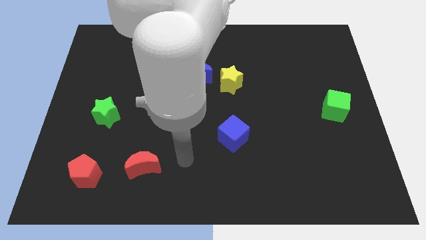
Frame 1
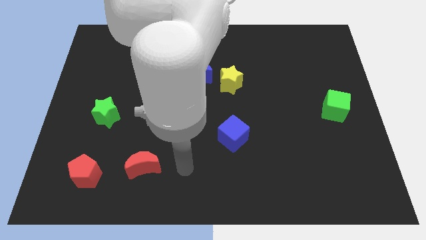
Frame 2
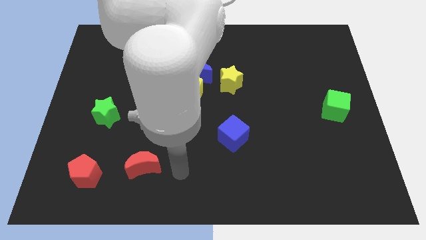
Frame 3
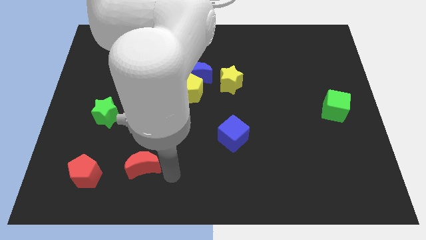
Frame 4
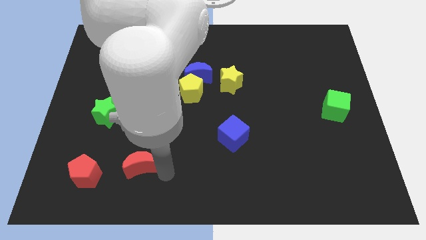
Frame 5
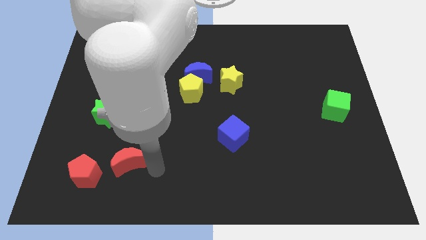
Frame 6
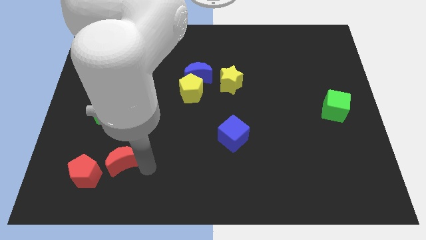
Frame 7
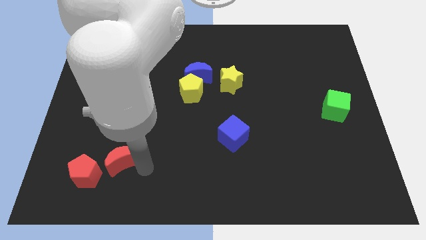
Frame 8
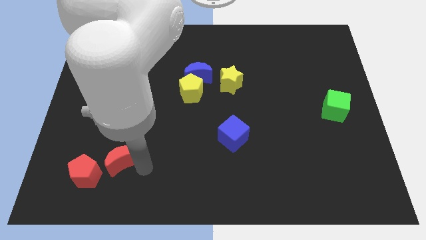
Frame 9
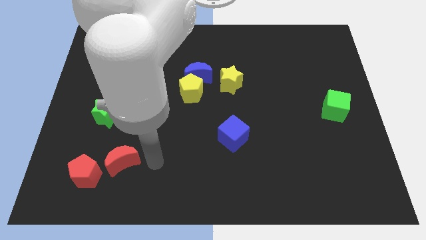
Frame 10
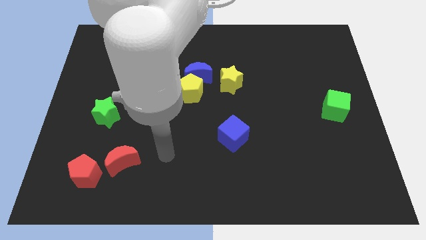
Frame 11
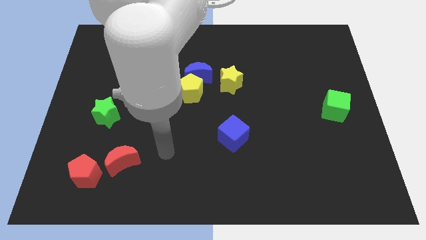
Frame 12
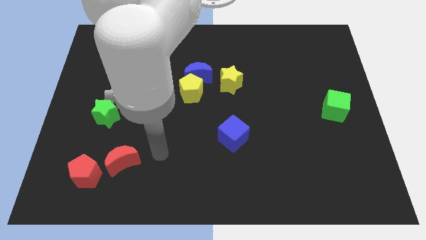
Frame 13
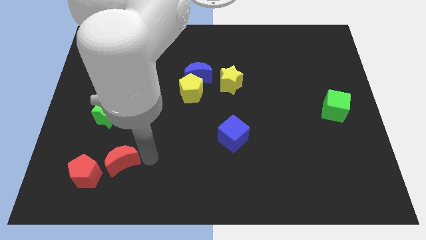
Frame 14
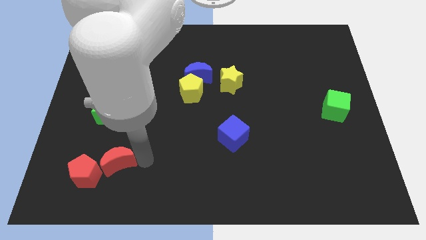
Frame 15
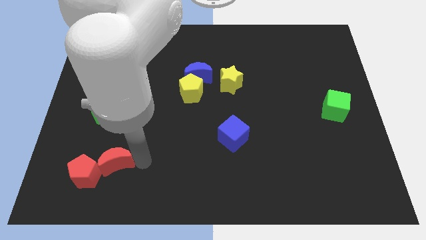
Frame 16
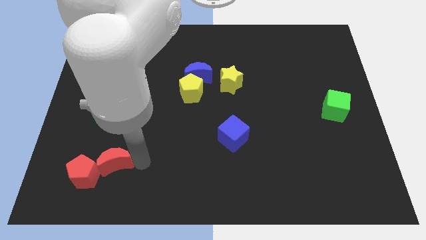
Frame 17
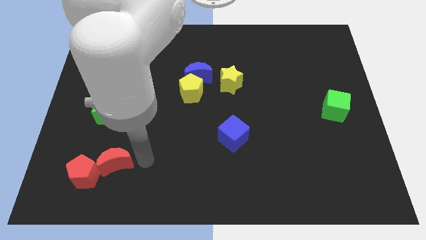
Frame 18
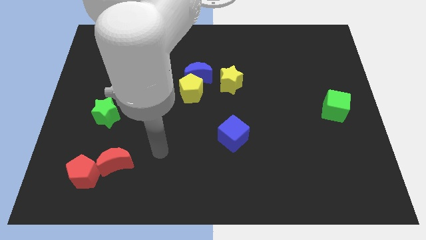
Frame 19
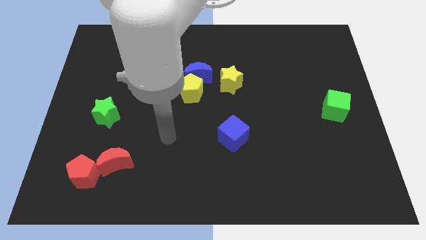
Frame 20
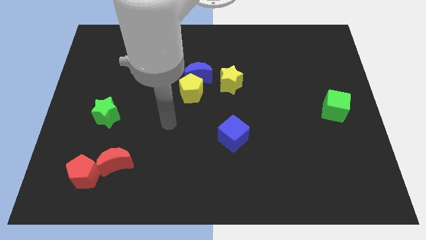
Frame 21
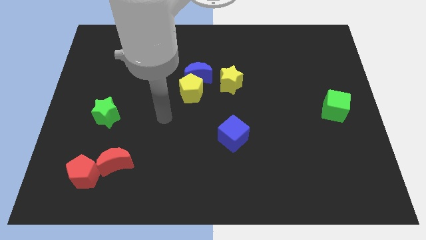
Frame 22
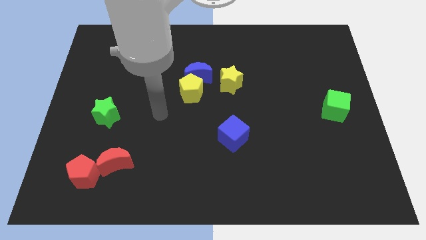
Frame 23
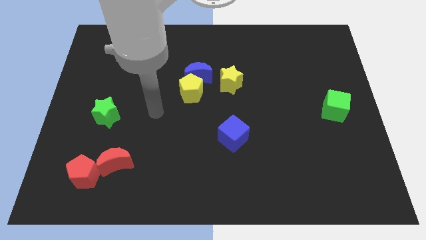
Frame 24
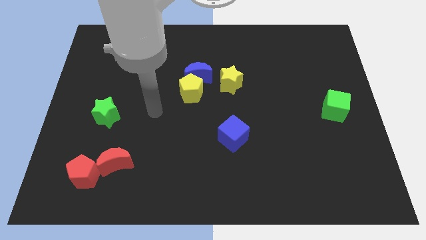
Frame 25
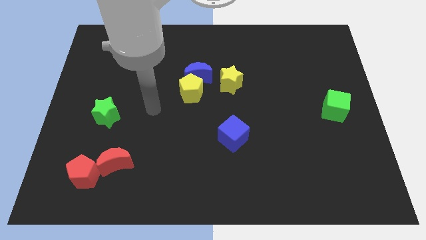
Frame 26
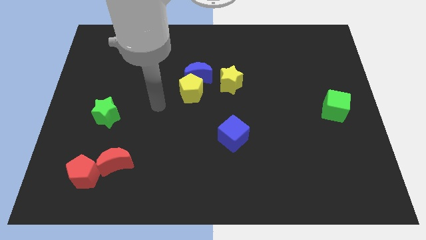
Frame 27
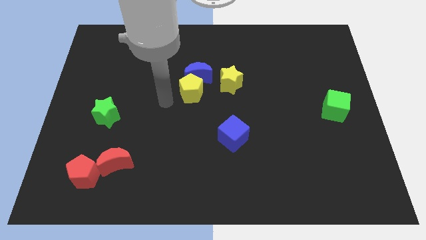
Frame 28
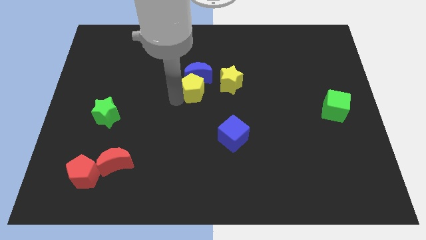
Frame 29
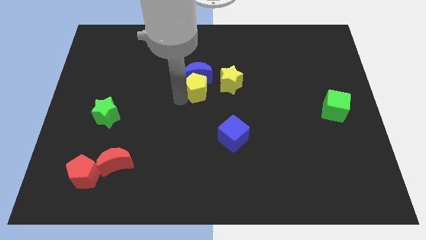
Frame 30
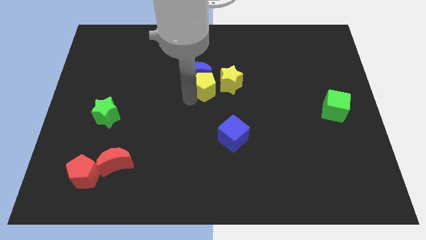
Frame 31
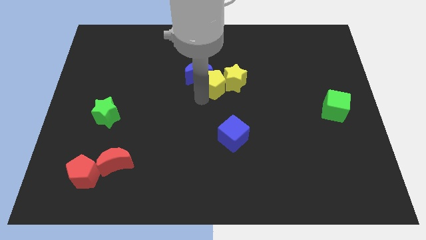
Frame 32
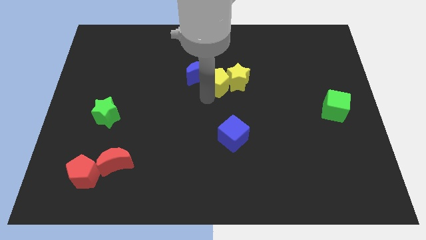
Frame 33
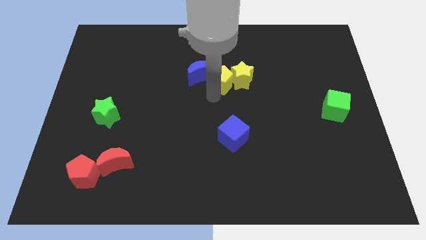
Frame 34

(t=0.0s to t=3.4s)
push the yellow pentagon into the yellow star

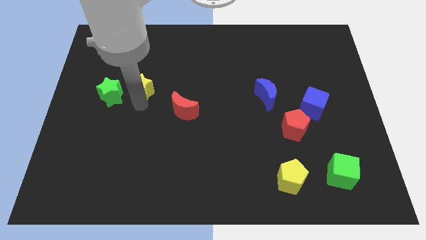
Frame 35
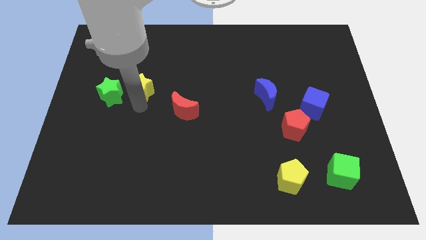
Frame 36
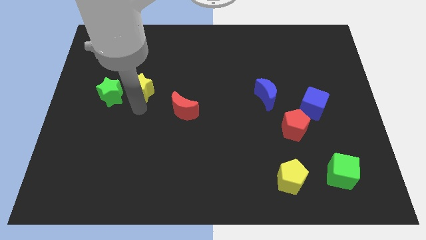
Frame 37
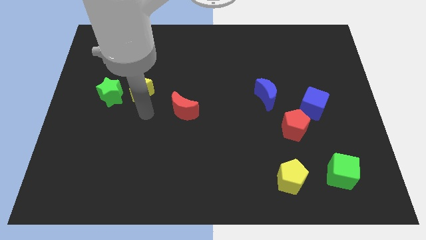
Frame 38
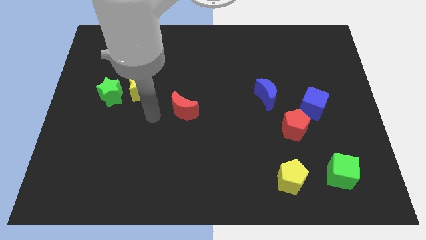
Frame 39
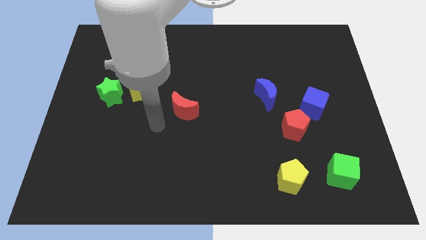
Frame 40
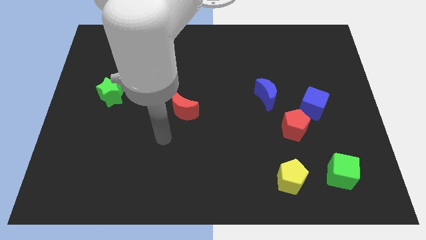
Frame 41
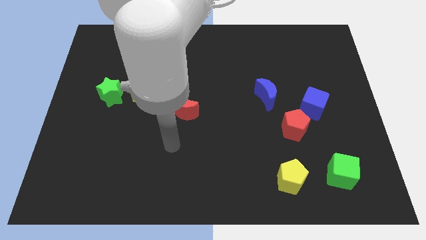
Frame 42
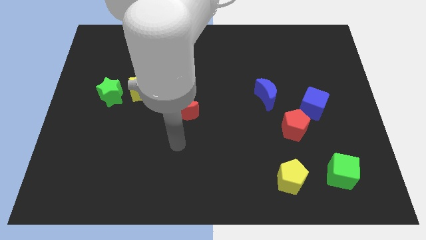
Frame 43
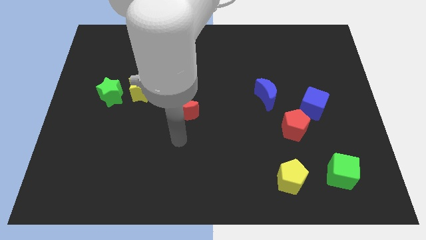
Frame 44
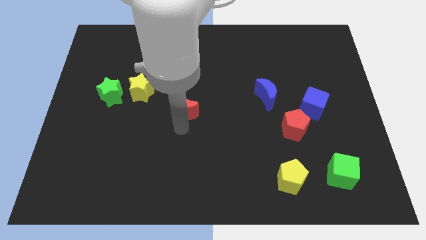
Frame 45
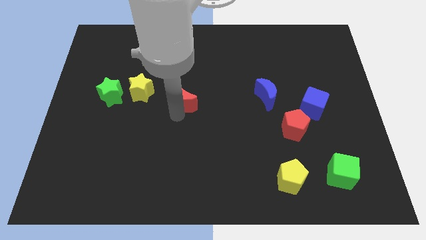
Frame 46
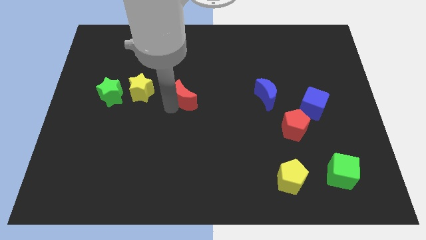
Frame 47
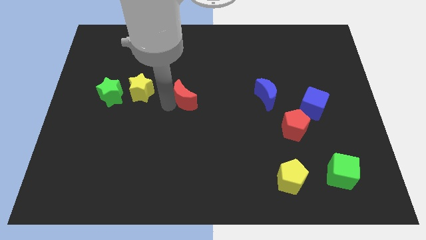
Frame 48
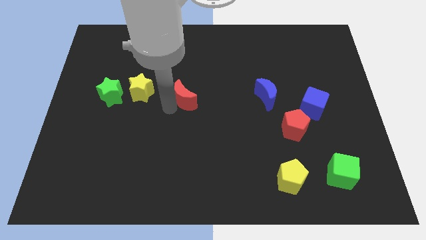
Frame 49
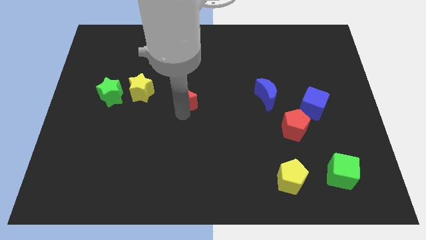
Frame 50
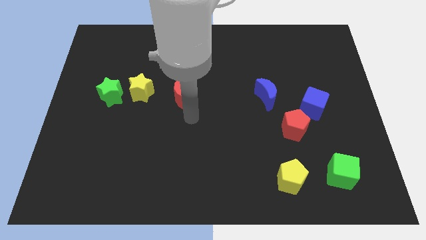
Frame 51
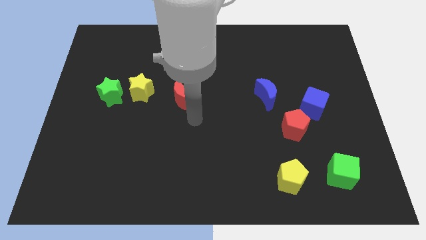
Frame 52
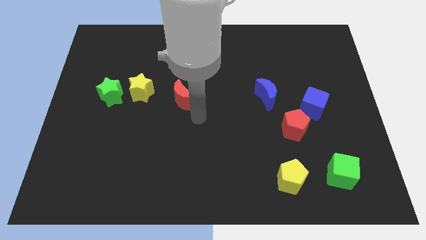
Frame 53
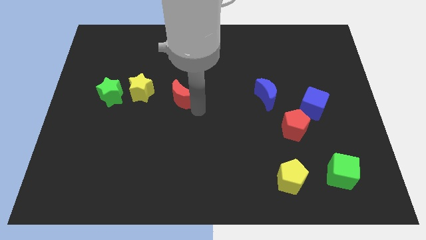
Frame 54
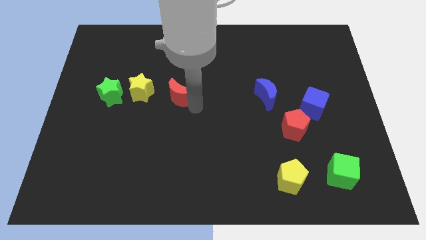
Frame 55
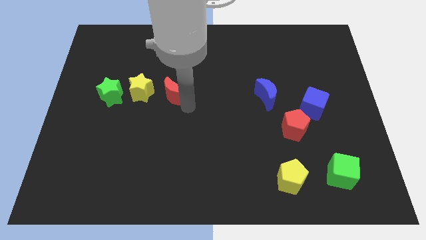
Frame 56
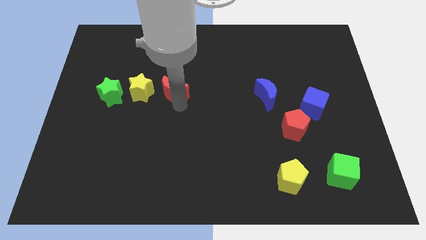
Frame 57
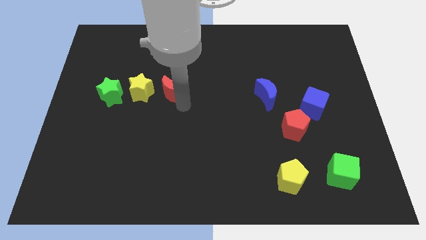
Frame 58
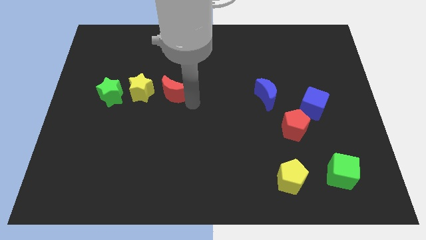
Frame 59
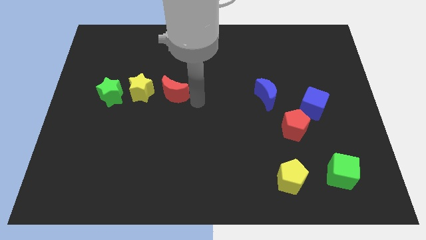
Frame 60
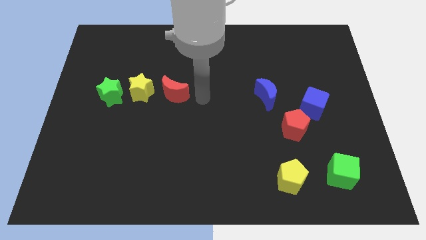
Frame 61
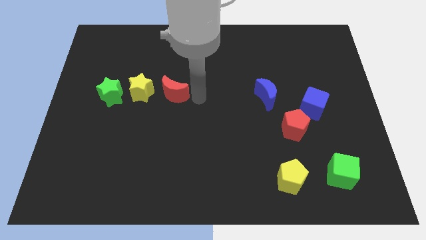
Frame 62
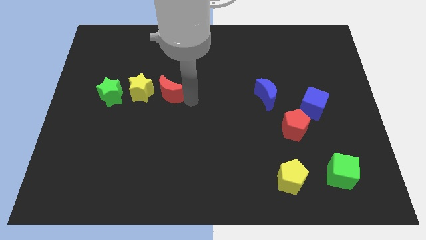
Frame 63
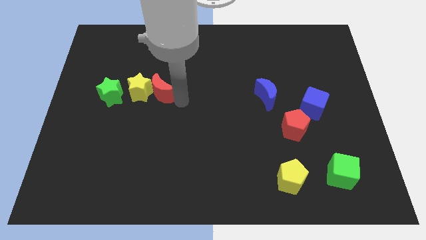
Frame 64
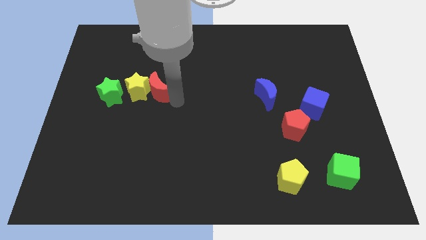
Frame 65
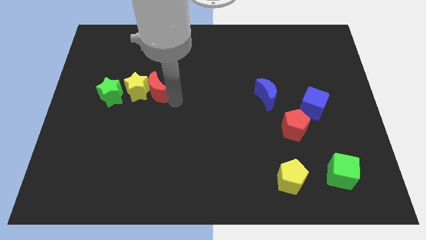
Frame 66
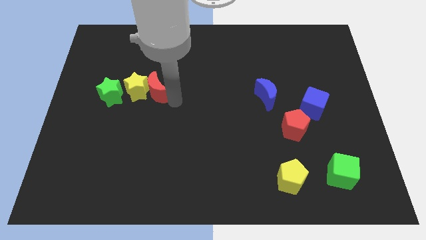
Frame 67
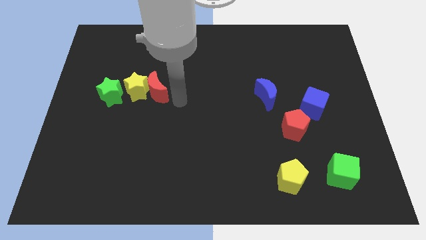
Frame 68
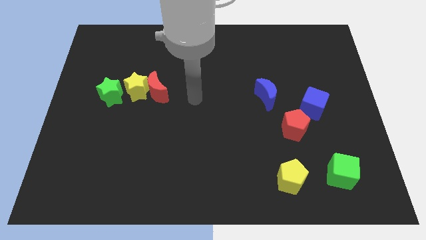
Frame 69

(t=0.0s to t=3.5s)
push red crescent into yellow star

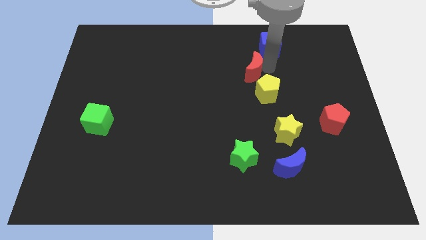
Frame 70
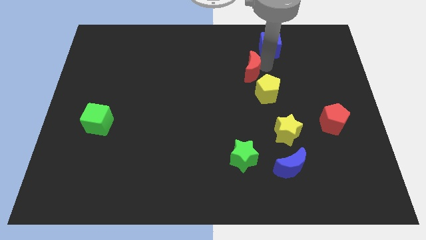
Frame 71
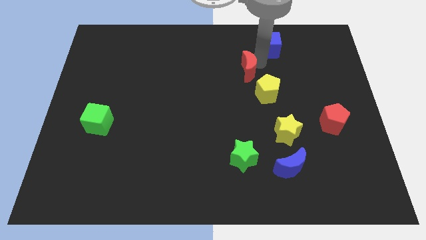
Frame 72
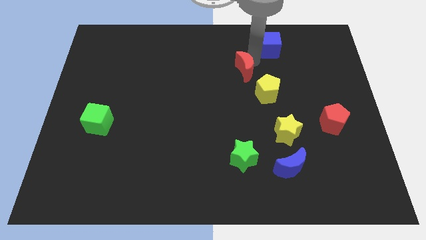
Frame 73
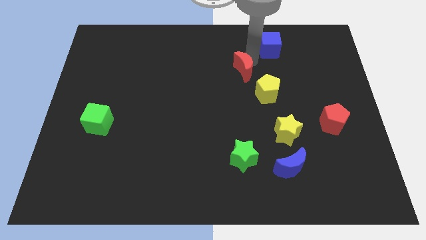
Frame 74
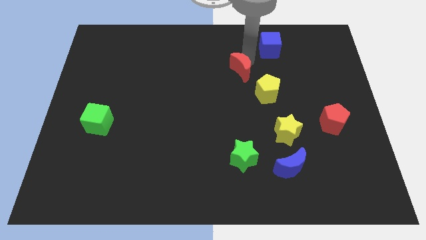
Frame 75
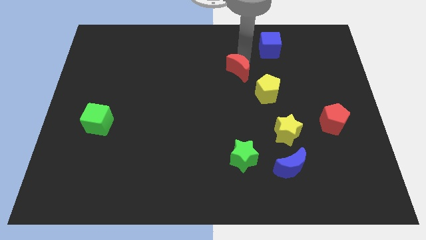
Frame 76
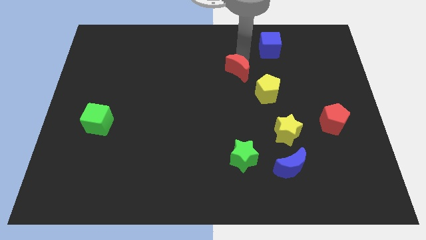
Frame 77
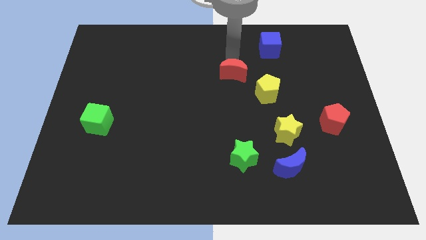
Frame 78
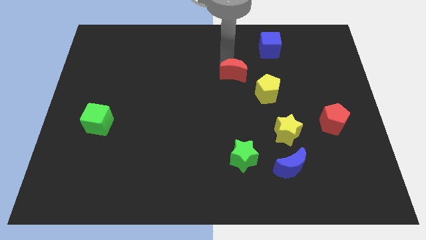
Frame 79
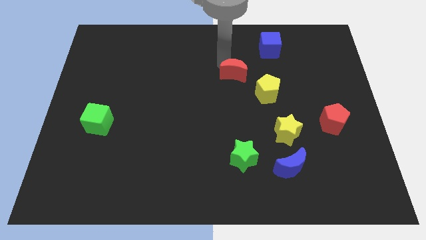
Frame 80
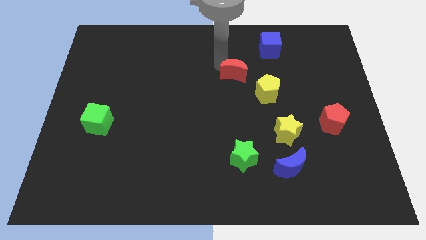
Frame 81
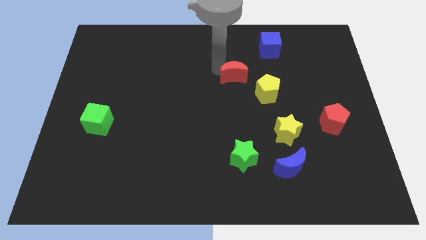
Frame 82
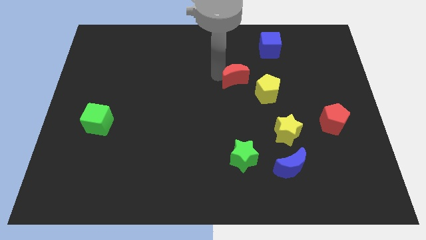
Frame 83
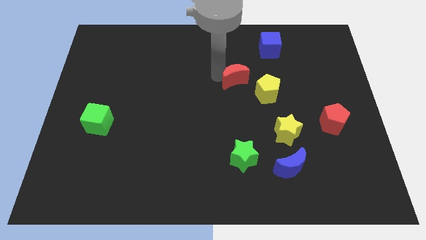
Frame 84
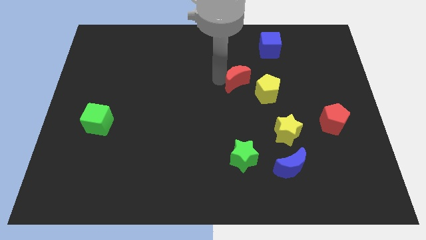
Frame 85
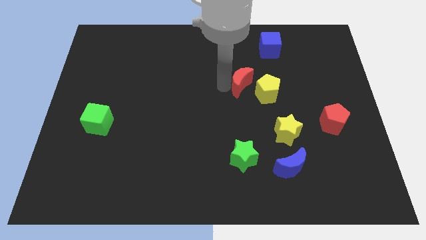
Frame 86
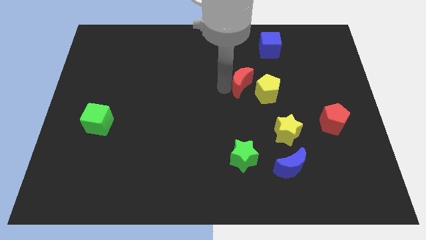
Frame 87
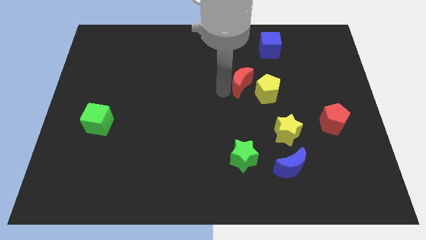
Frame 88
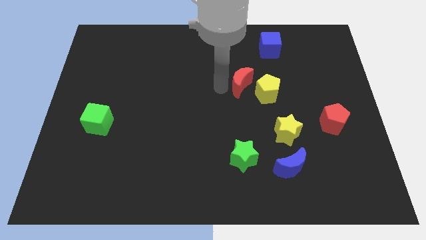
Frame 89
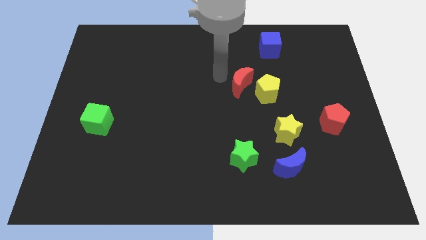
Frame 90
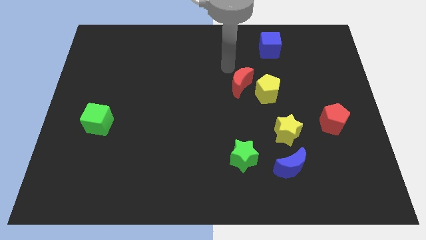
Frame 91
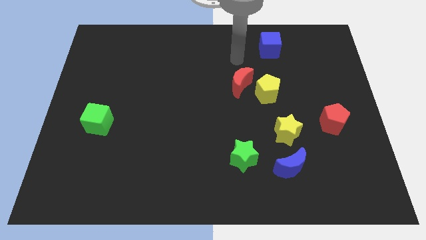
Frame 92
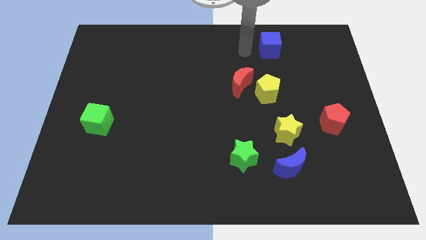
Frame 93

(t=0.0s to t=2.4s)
place the red moon left to the yellow pentagon
